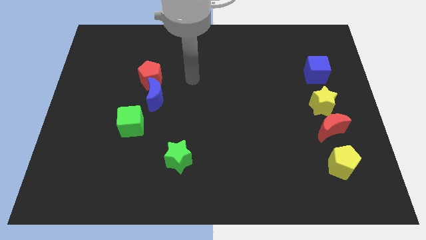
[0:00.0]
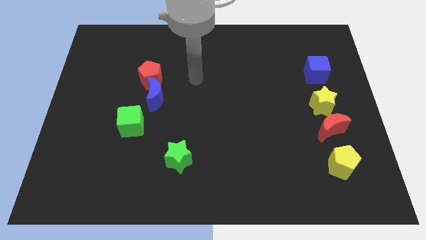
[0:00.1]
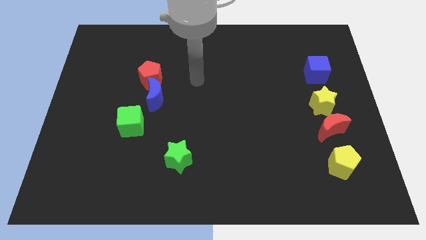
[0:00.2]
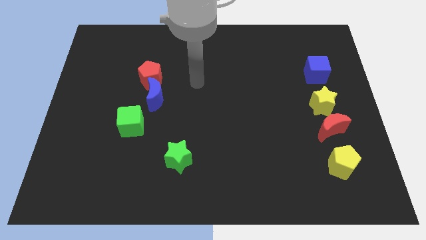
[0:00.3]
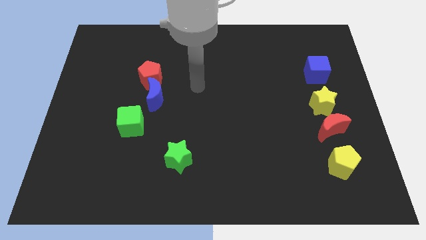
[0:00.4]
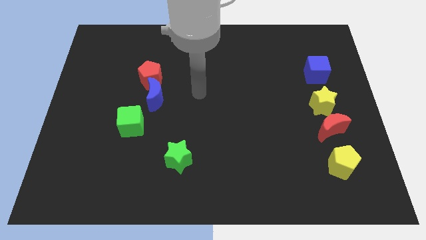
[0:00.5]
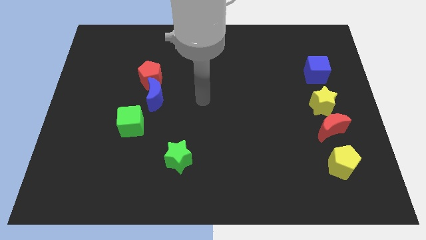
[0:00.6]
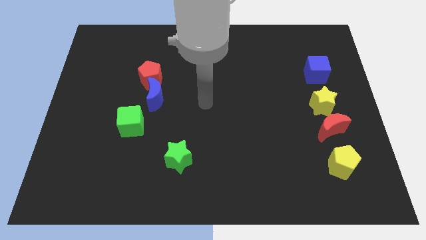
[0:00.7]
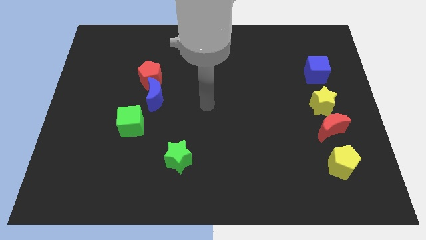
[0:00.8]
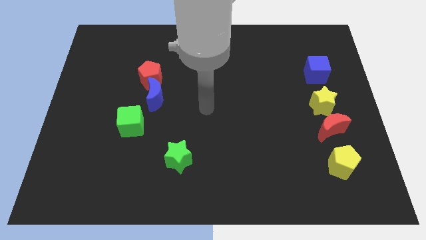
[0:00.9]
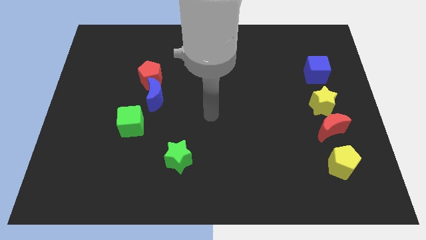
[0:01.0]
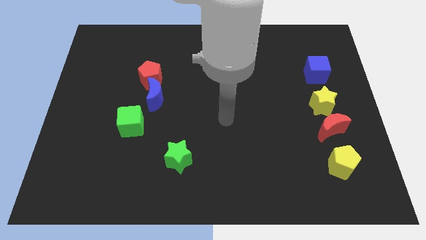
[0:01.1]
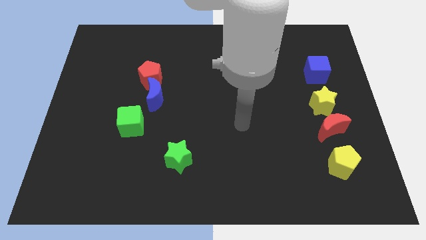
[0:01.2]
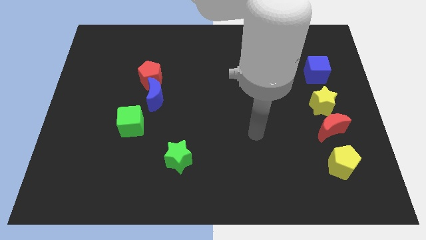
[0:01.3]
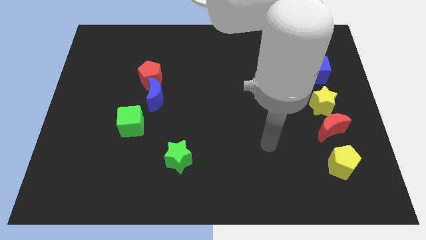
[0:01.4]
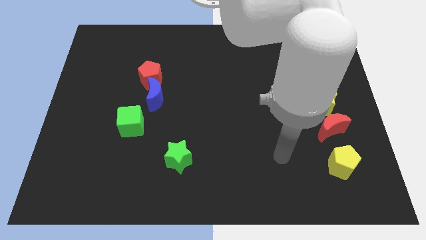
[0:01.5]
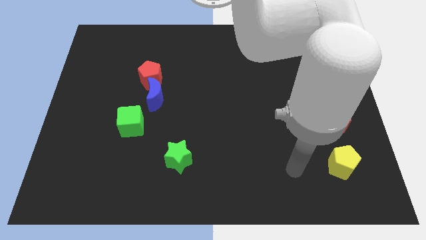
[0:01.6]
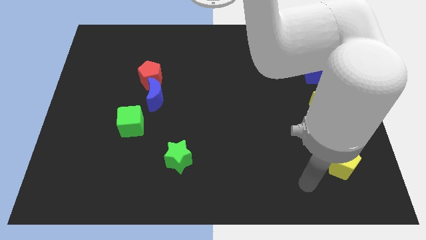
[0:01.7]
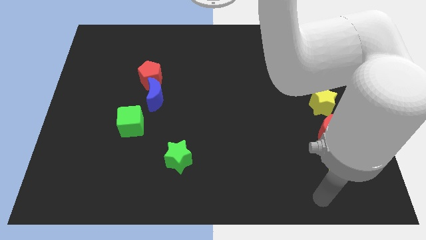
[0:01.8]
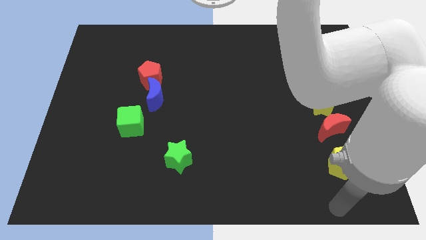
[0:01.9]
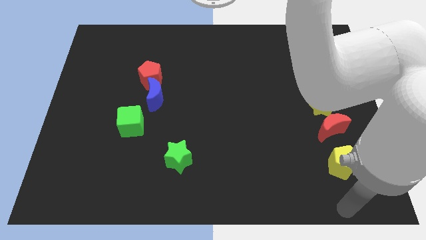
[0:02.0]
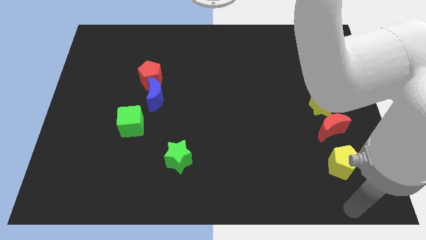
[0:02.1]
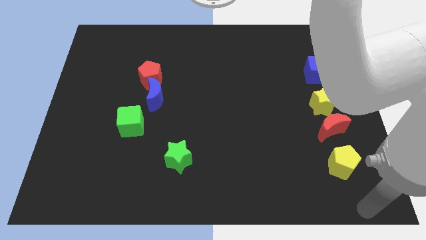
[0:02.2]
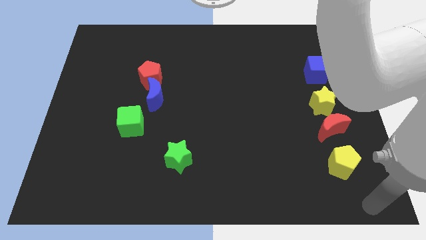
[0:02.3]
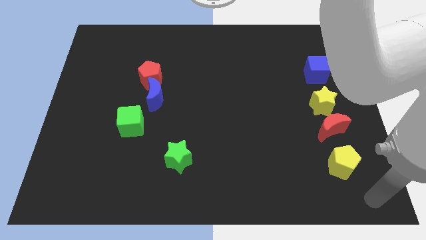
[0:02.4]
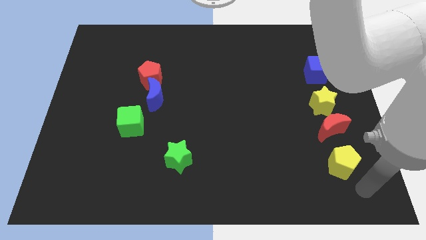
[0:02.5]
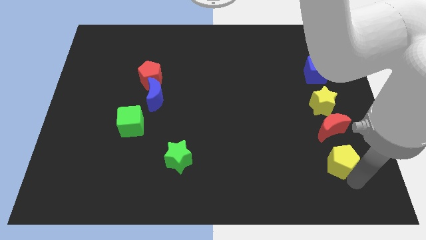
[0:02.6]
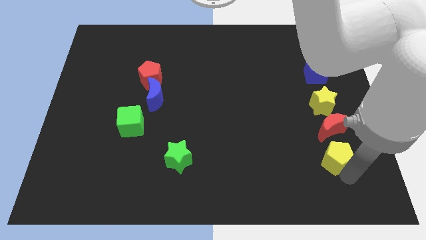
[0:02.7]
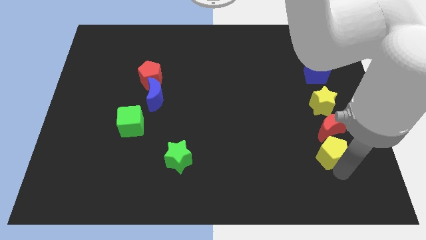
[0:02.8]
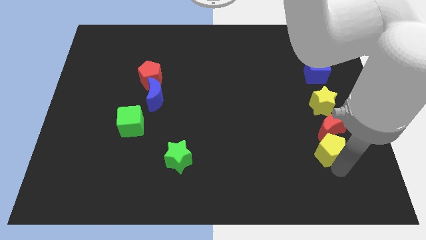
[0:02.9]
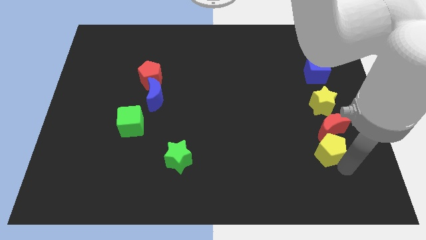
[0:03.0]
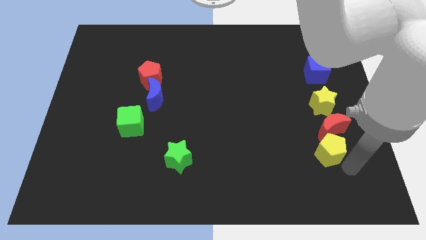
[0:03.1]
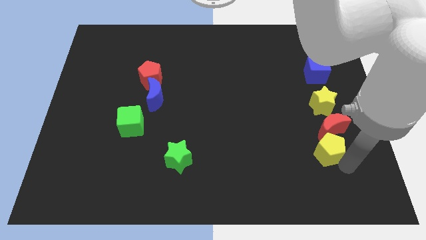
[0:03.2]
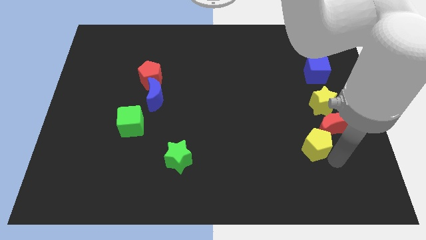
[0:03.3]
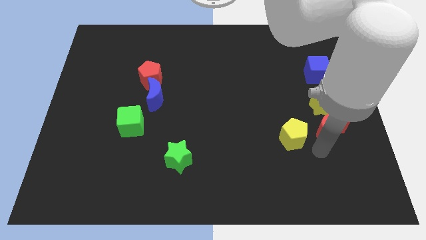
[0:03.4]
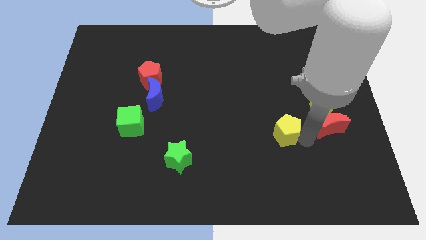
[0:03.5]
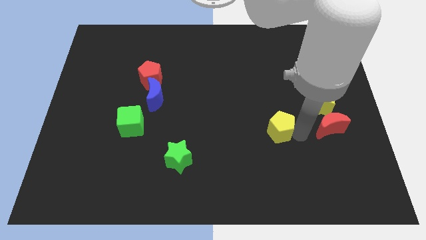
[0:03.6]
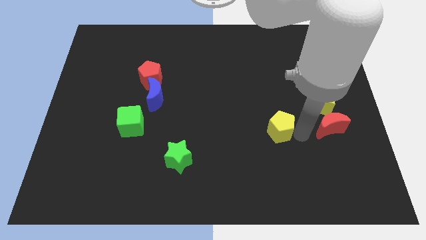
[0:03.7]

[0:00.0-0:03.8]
place the yellow pentagon parallel left to the red crescent

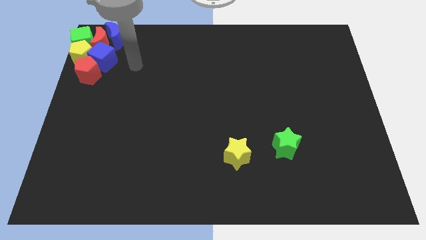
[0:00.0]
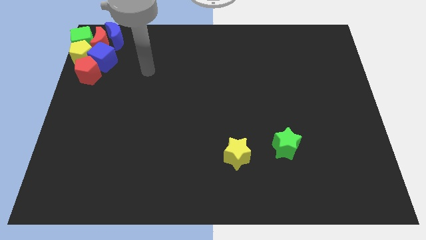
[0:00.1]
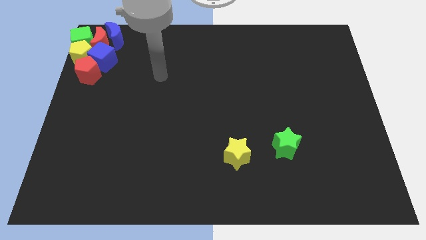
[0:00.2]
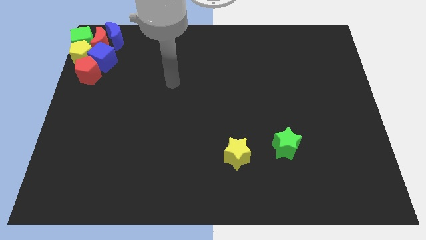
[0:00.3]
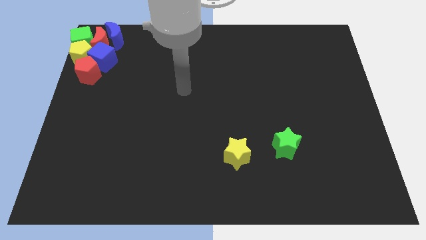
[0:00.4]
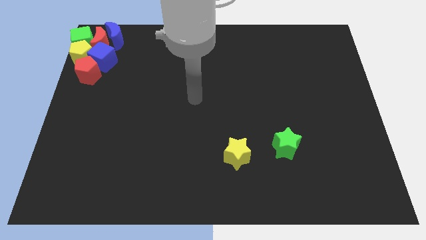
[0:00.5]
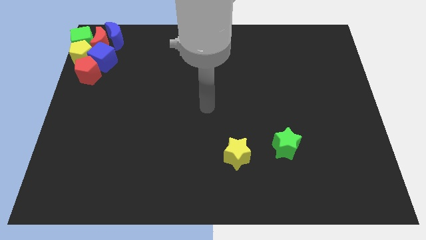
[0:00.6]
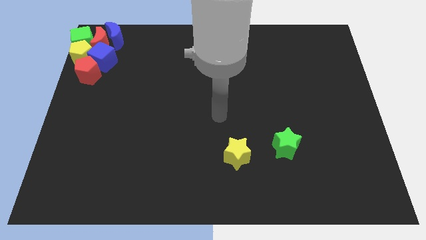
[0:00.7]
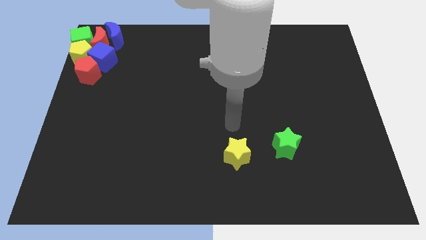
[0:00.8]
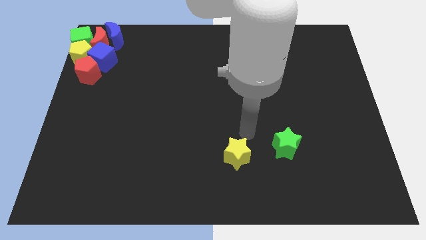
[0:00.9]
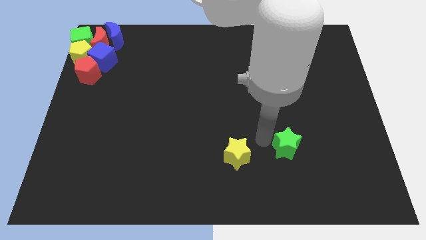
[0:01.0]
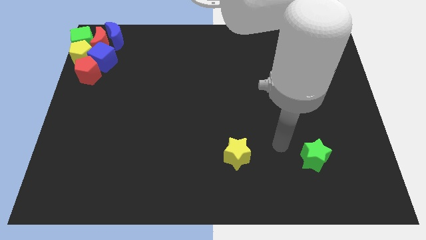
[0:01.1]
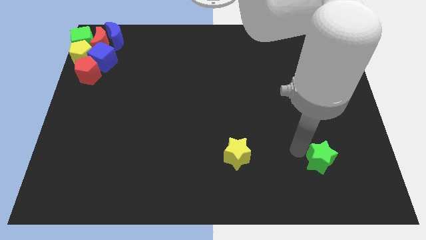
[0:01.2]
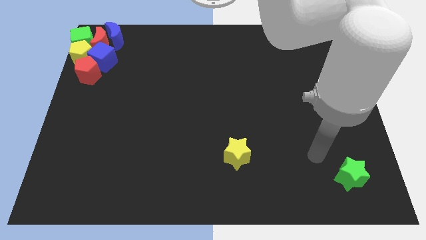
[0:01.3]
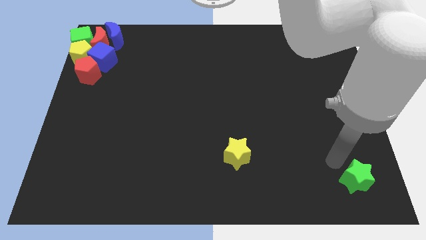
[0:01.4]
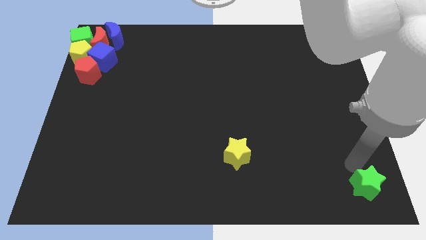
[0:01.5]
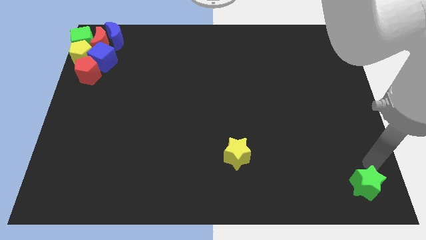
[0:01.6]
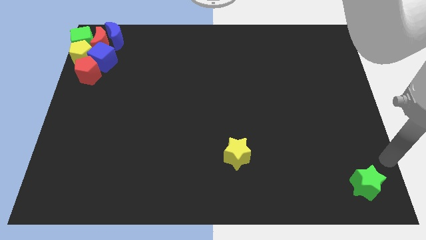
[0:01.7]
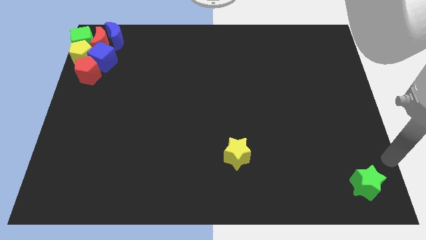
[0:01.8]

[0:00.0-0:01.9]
drag the green star to the bottom right corner of the board

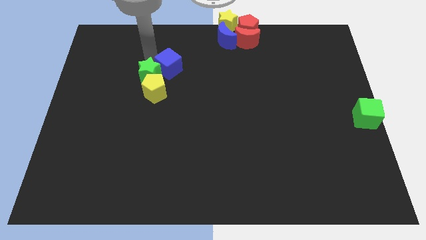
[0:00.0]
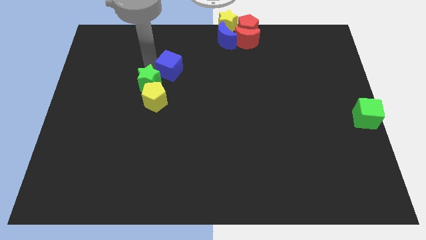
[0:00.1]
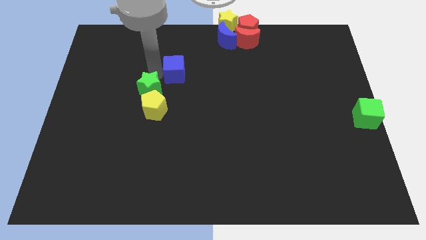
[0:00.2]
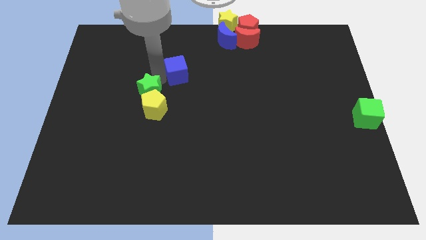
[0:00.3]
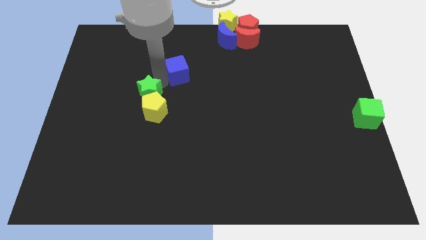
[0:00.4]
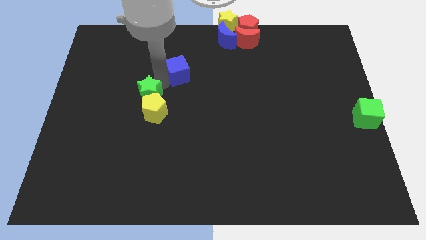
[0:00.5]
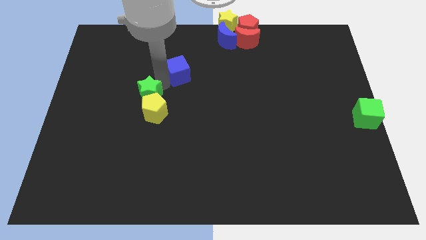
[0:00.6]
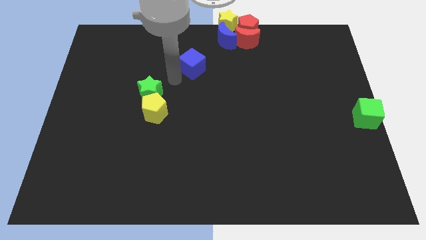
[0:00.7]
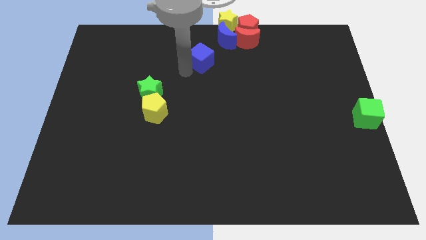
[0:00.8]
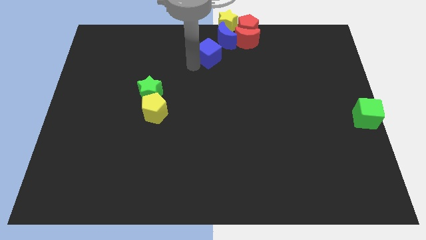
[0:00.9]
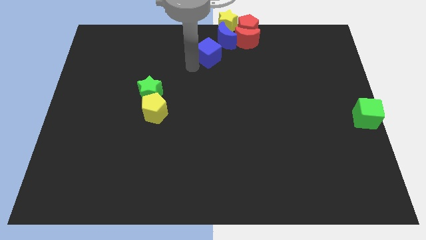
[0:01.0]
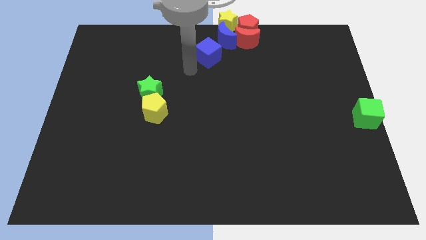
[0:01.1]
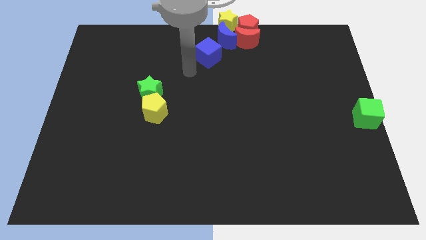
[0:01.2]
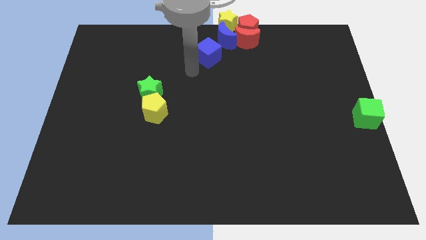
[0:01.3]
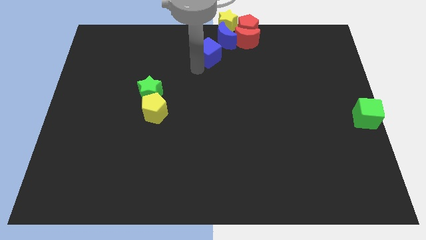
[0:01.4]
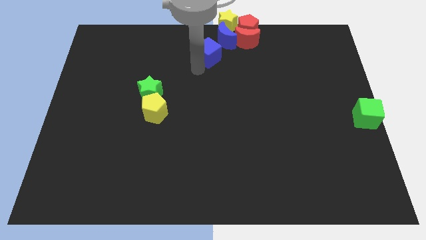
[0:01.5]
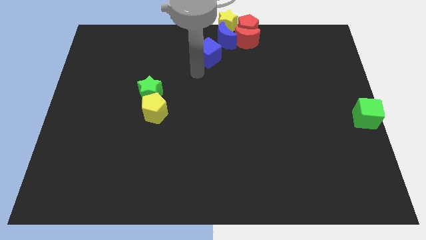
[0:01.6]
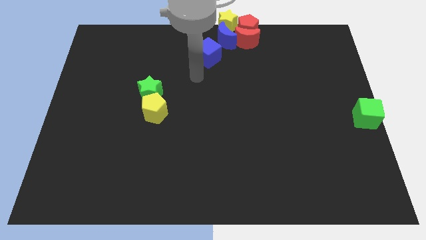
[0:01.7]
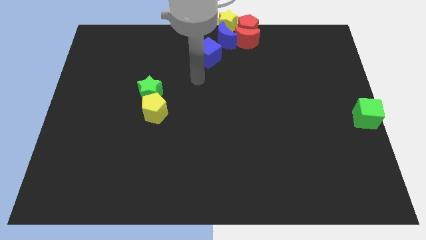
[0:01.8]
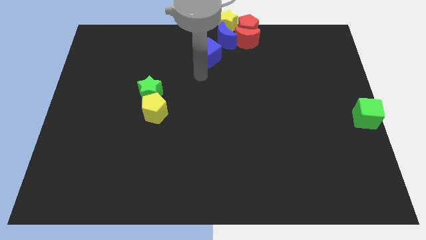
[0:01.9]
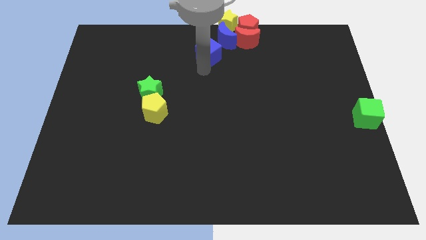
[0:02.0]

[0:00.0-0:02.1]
push the blue cube up slightly

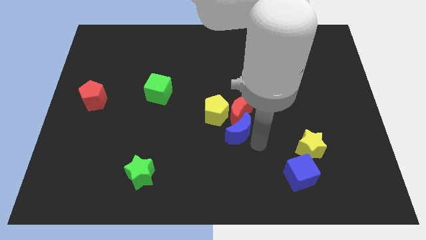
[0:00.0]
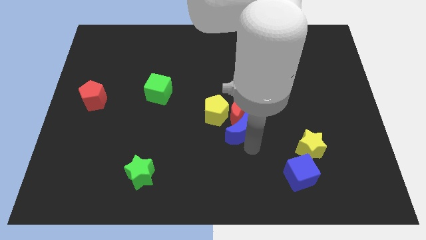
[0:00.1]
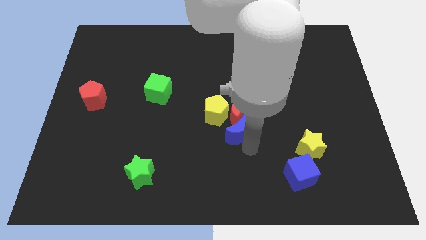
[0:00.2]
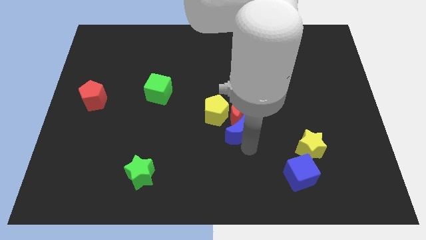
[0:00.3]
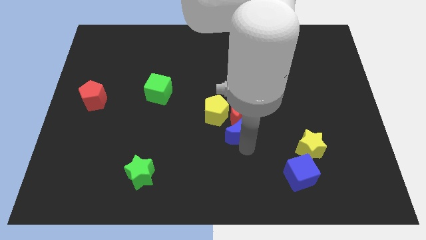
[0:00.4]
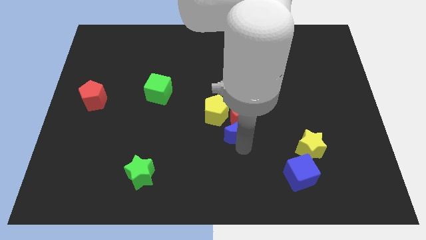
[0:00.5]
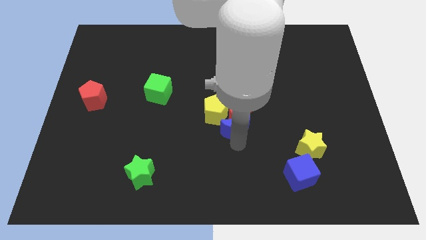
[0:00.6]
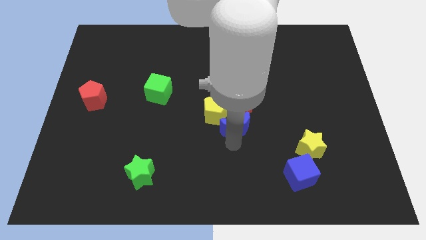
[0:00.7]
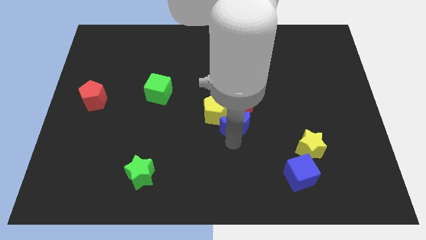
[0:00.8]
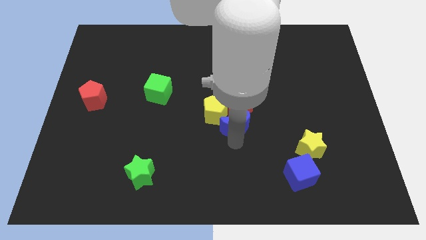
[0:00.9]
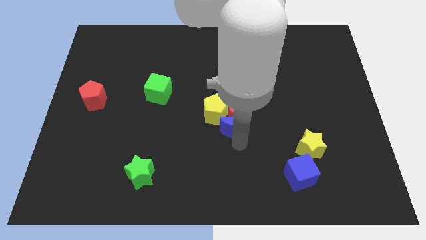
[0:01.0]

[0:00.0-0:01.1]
make the blue crescent to touch the bottom side of the yellow pentagon

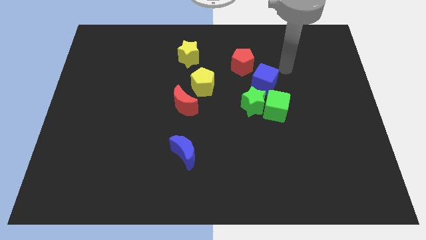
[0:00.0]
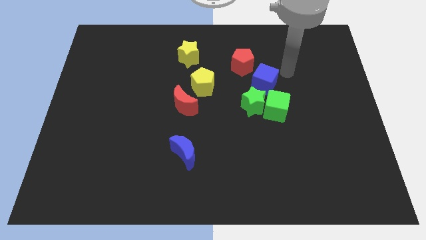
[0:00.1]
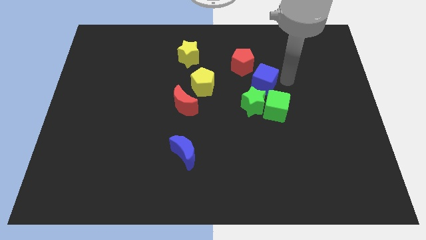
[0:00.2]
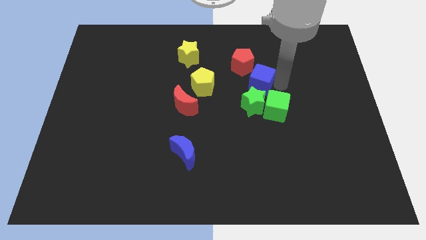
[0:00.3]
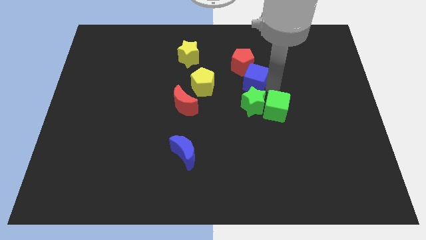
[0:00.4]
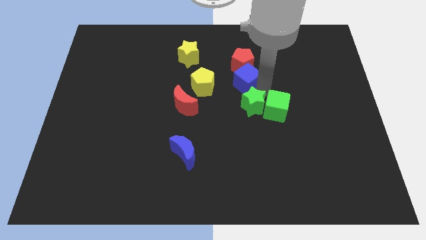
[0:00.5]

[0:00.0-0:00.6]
put the blue cube in between the red pentagon and green star
